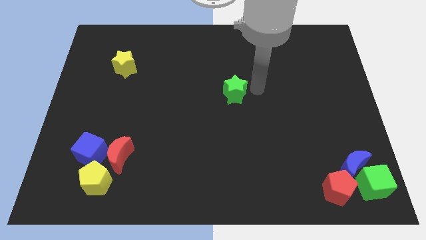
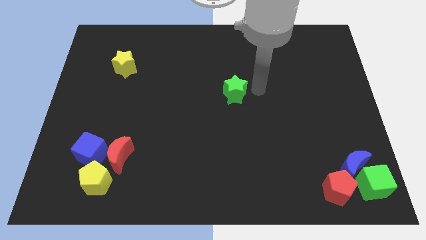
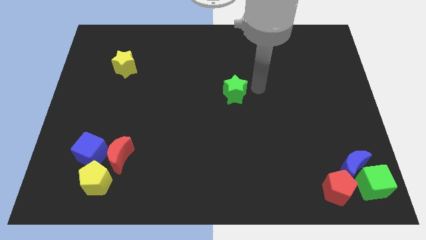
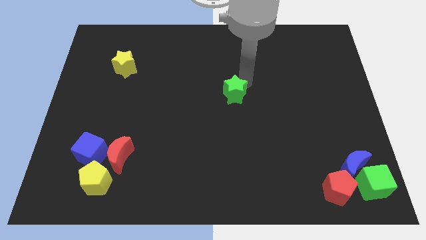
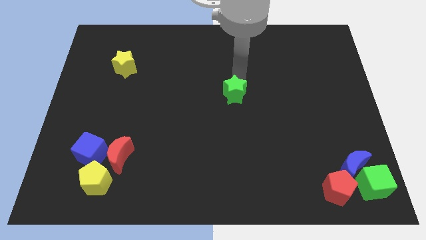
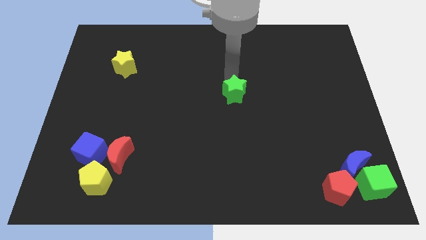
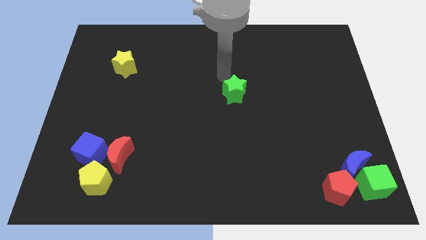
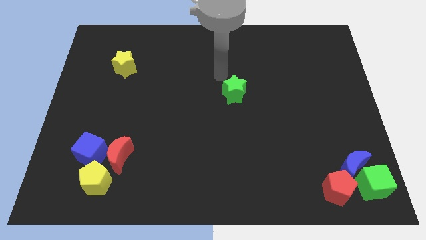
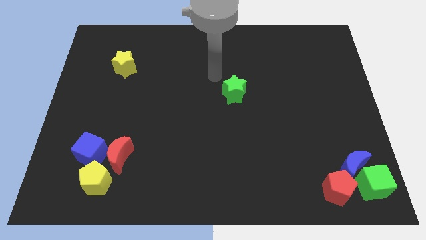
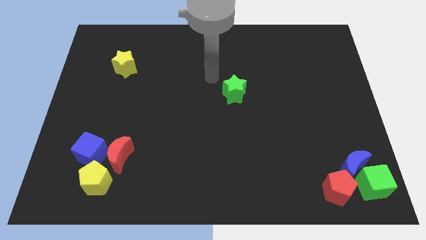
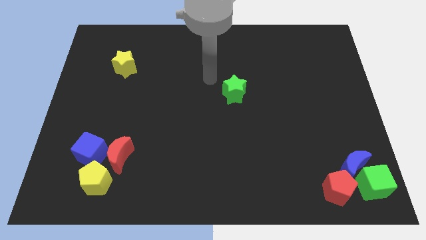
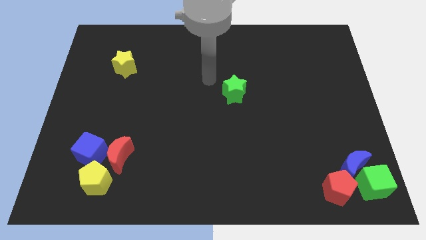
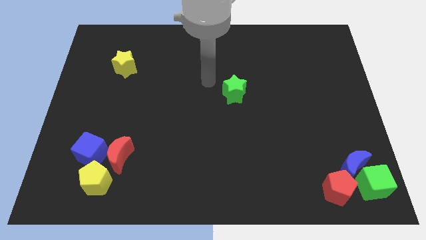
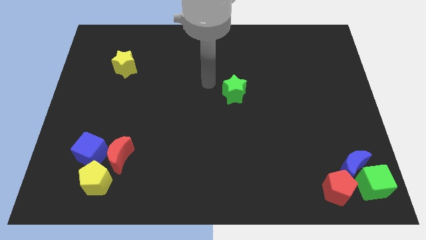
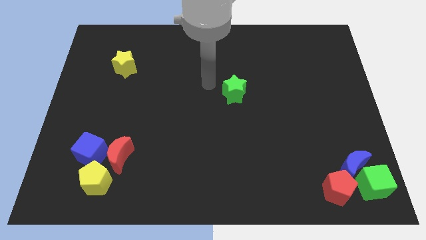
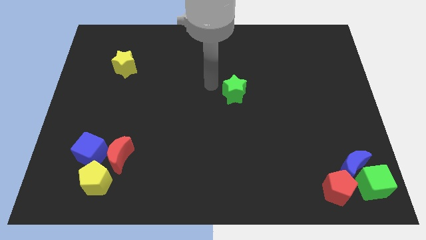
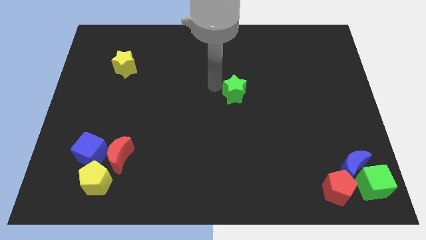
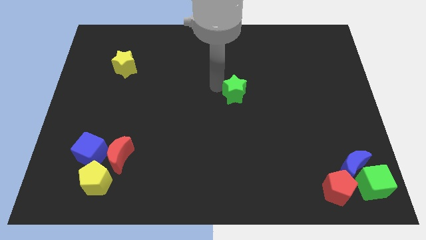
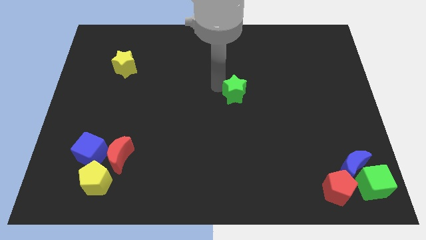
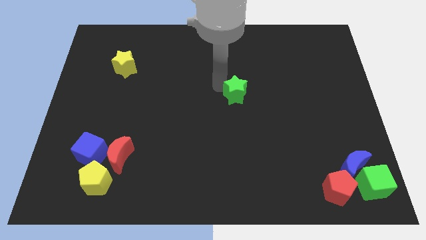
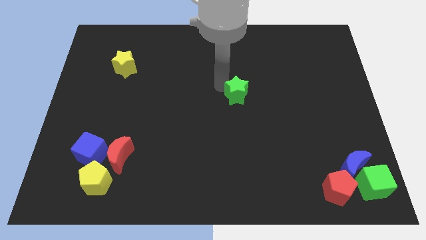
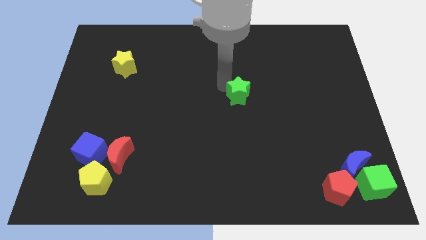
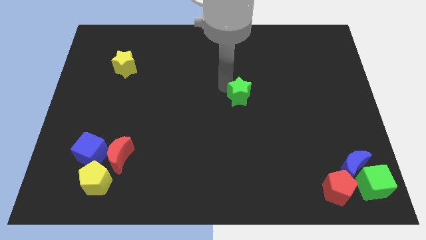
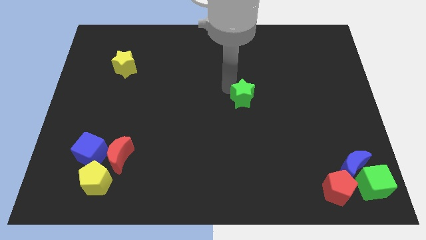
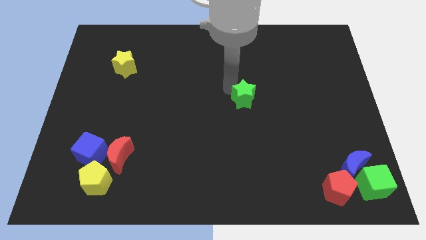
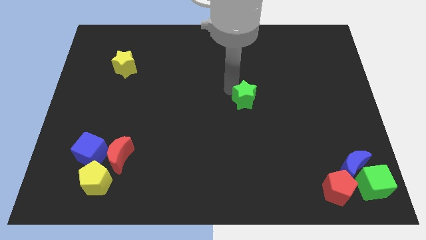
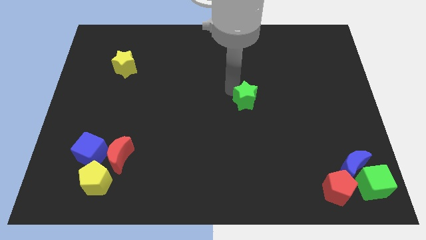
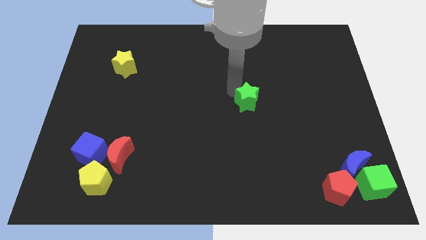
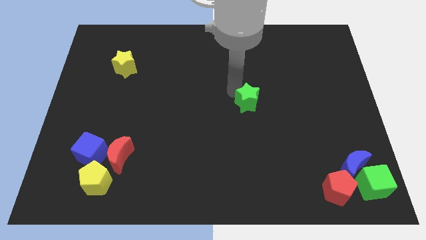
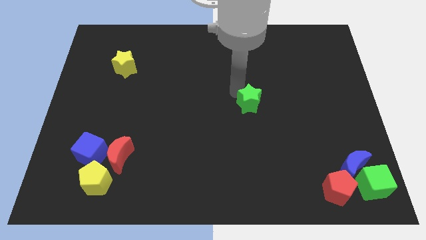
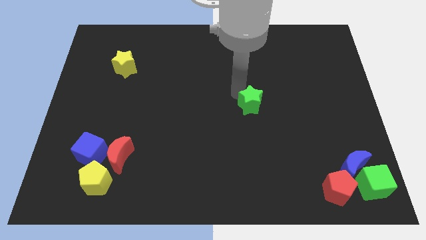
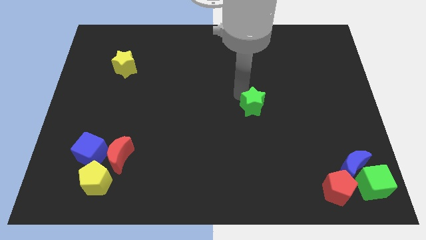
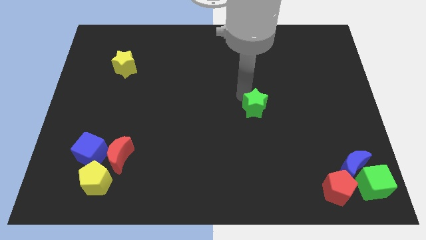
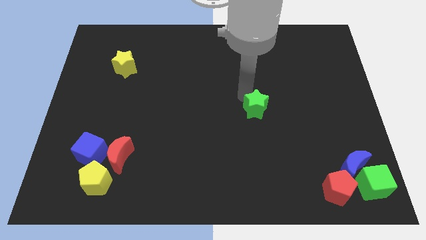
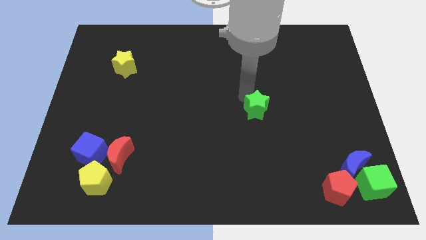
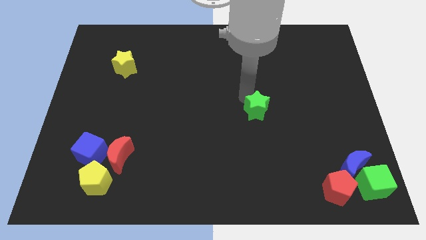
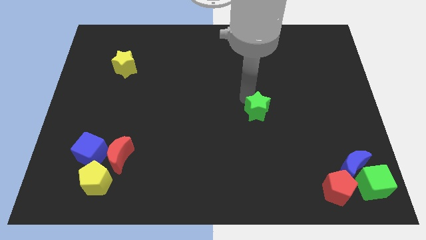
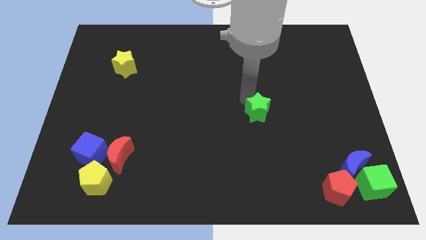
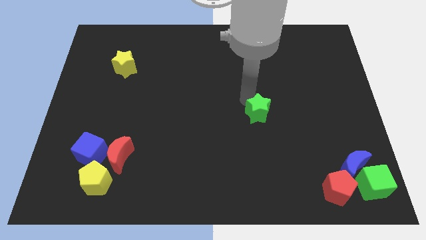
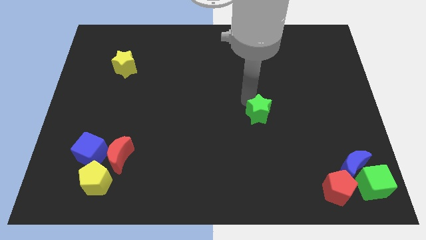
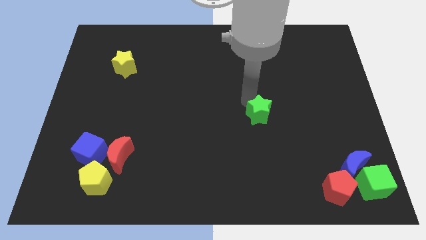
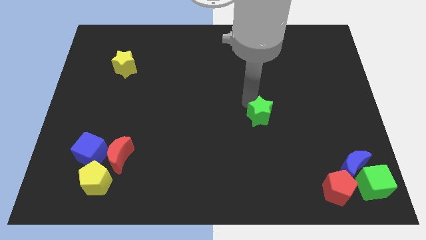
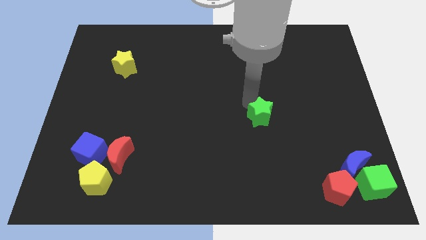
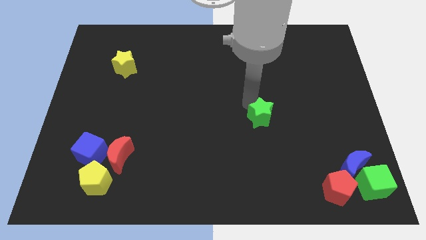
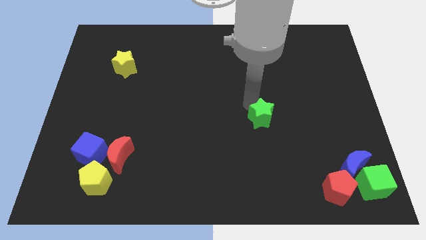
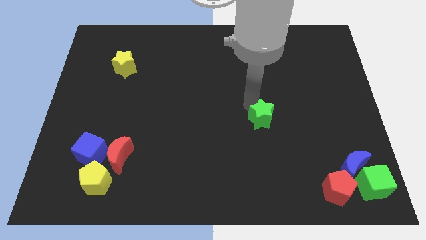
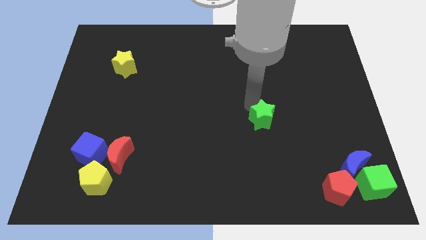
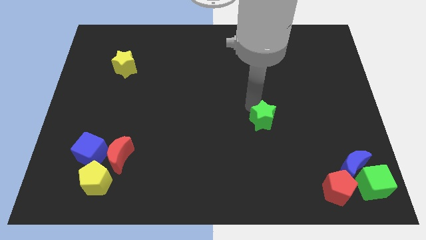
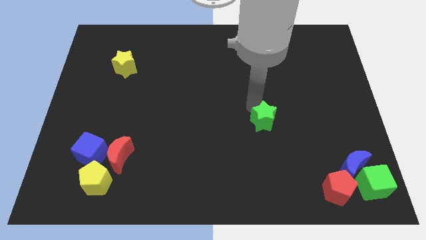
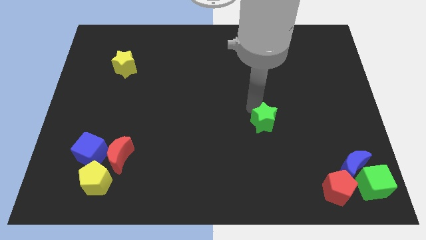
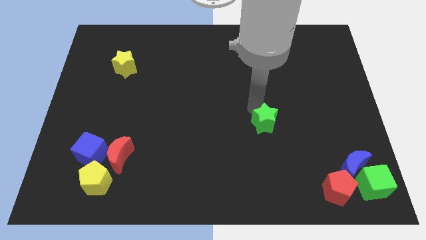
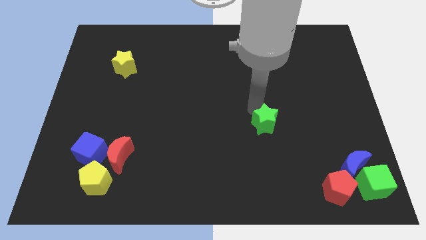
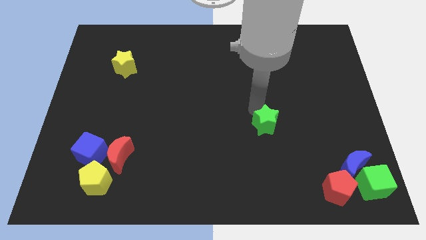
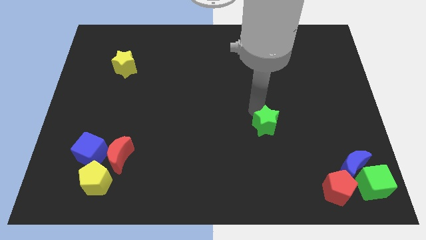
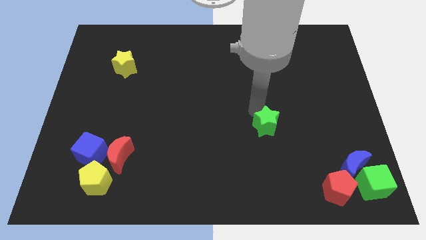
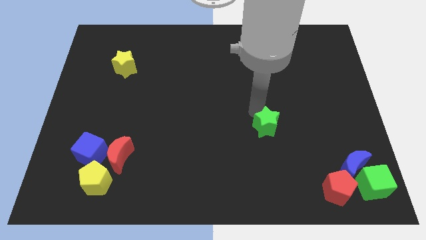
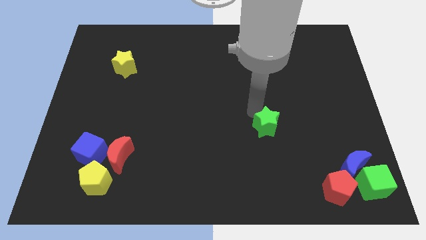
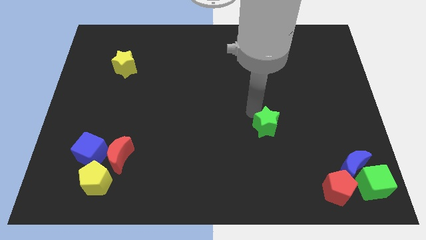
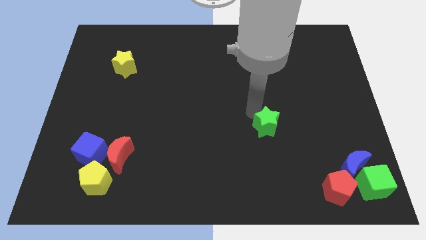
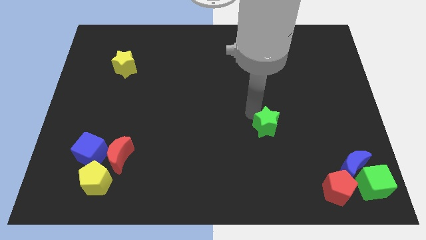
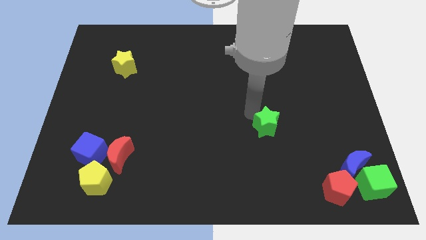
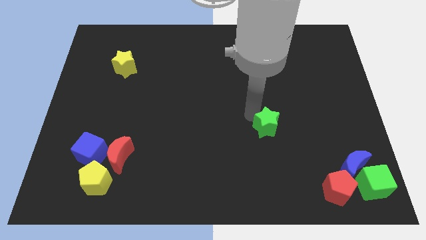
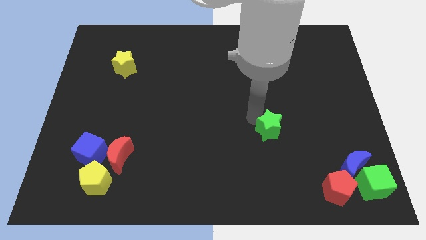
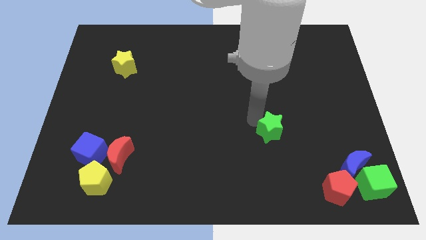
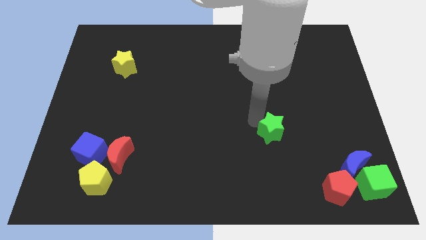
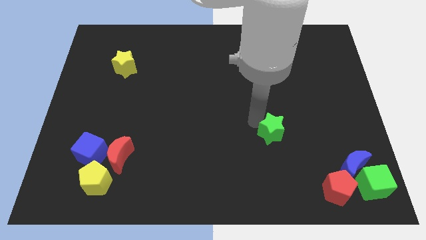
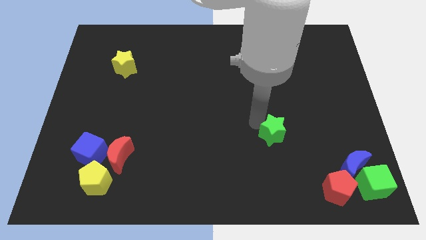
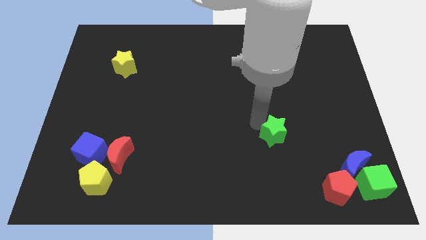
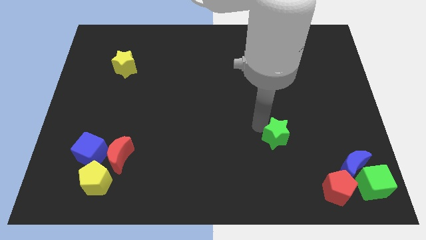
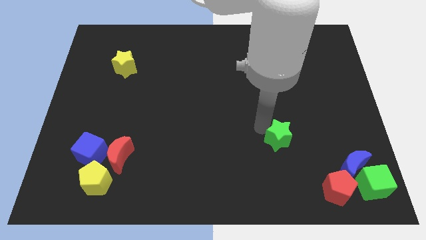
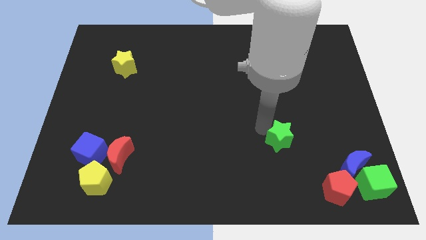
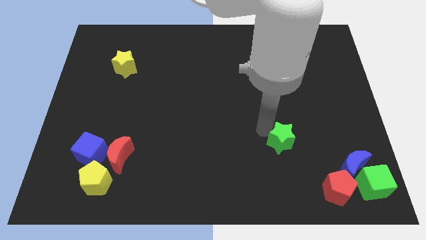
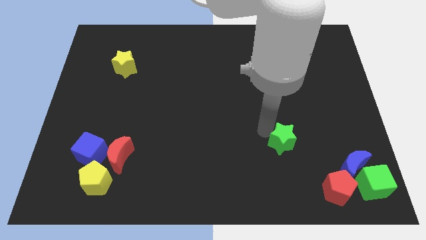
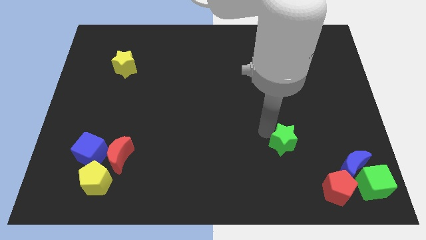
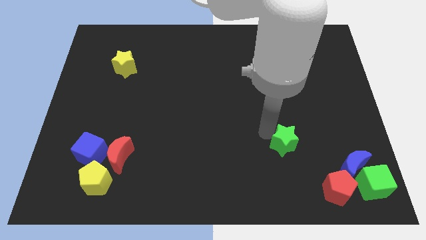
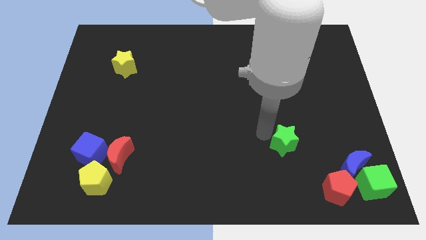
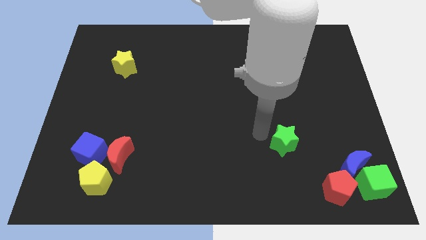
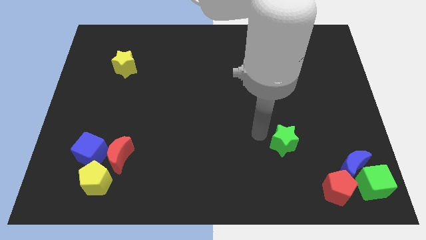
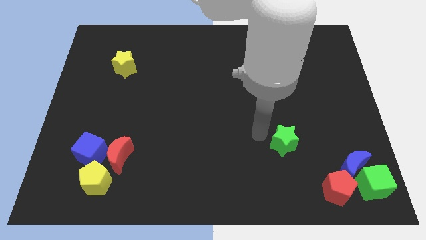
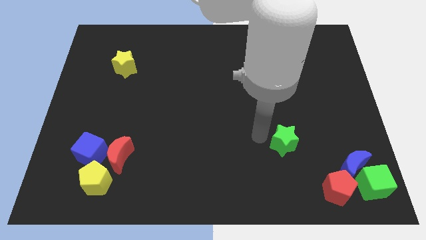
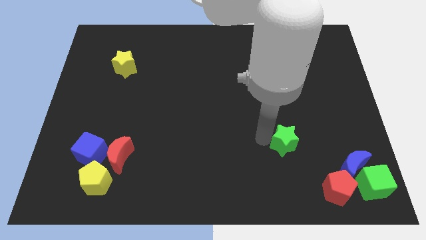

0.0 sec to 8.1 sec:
move the green star to the bottom right of the board

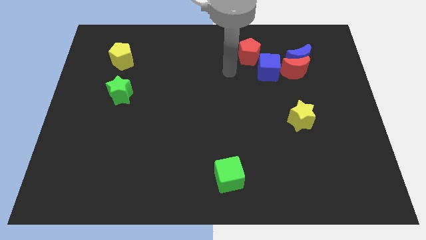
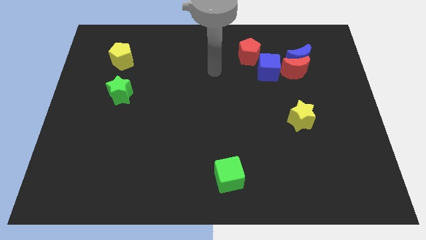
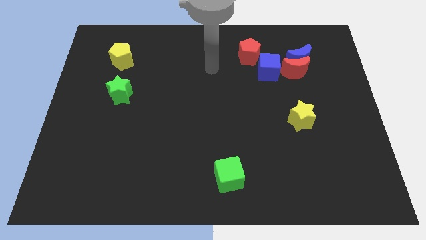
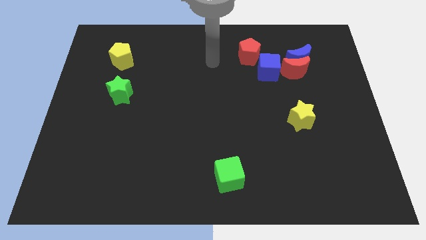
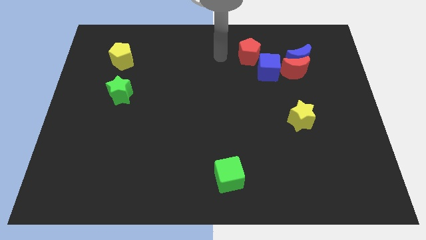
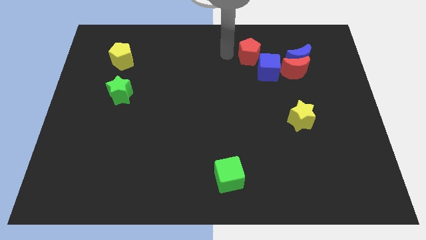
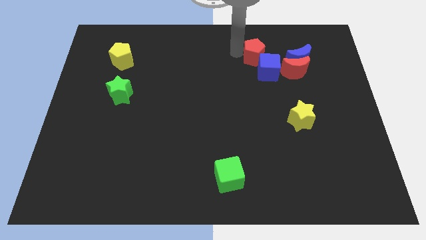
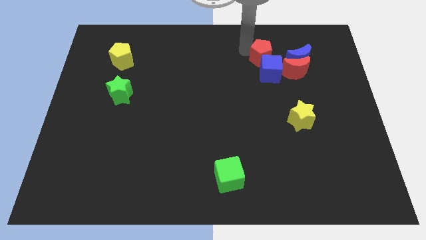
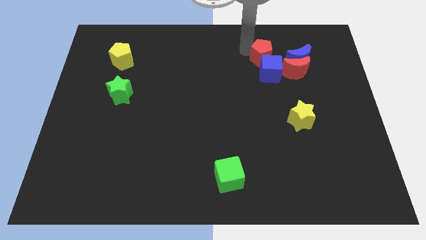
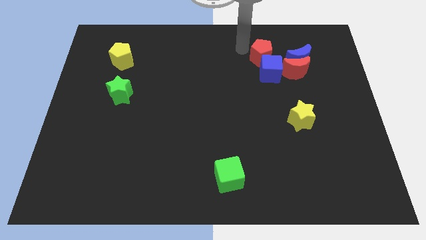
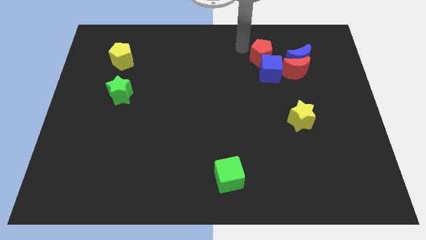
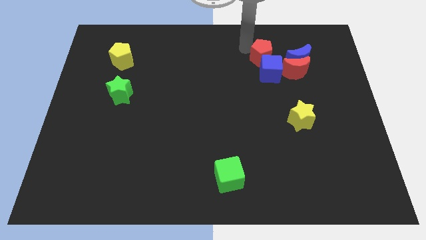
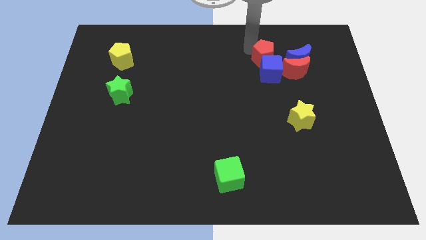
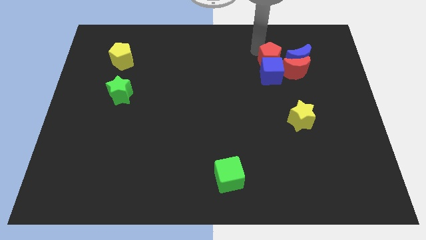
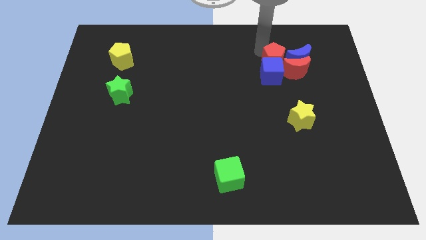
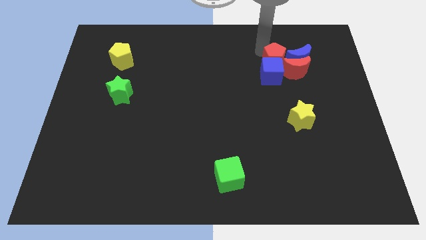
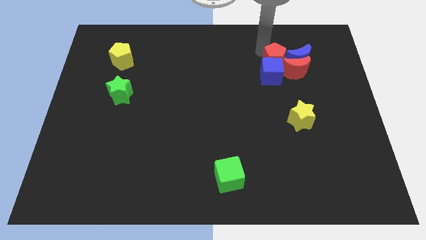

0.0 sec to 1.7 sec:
move the red pentagon above the blue cube
